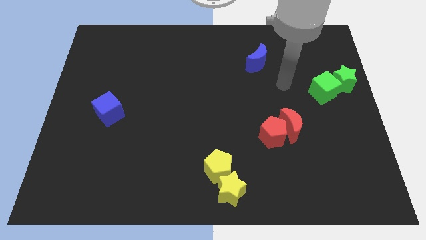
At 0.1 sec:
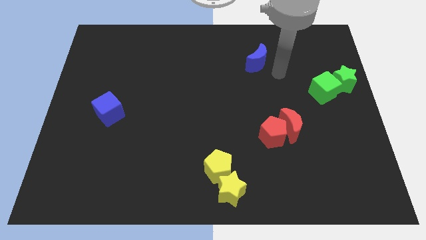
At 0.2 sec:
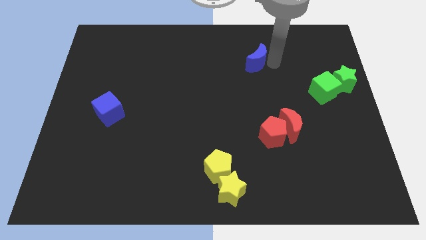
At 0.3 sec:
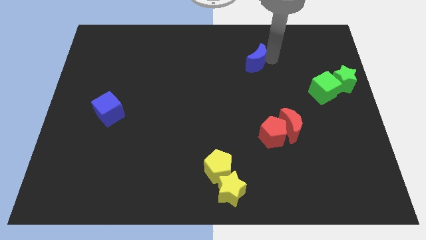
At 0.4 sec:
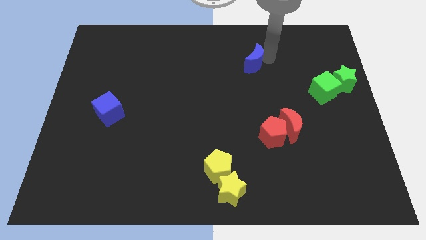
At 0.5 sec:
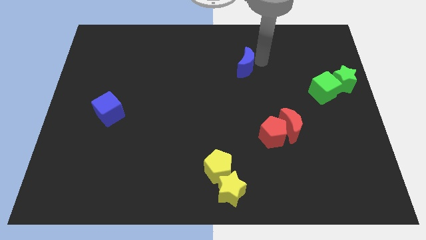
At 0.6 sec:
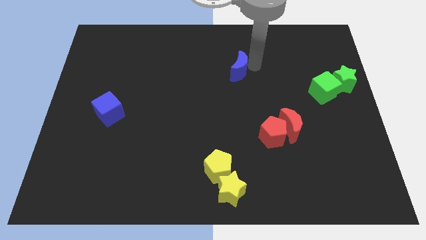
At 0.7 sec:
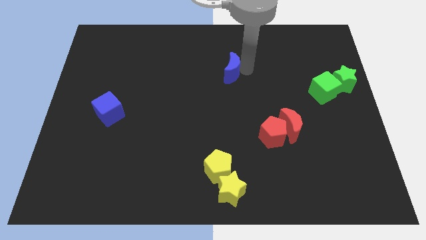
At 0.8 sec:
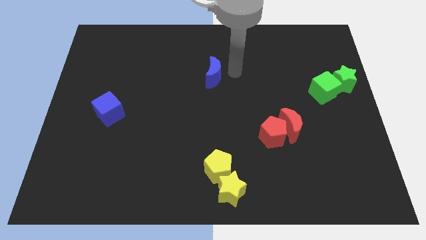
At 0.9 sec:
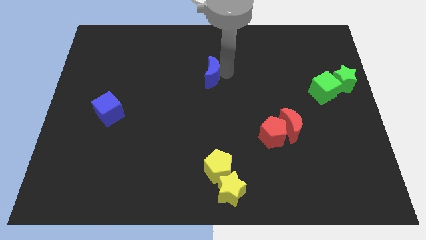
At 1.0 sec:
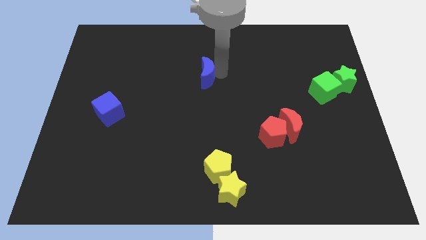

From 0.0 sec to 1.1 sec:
move the blue moon diagonal to the red pentagon

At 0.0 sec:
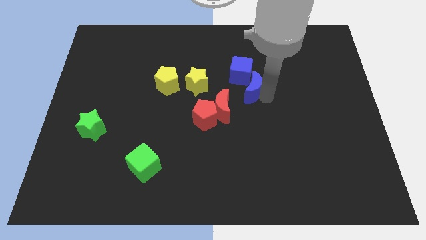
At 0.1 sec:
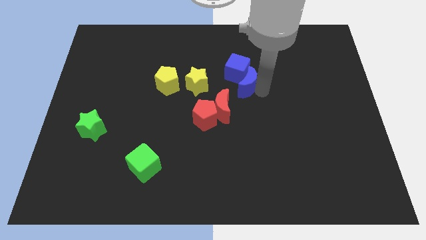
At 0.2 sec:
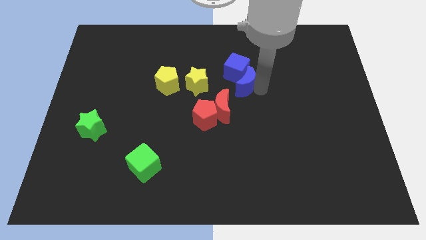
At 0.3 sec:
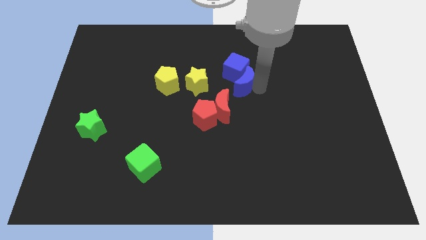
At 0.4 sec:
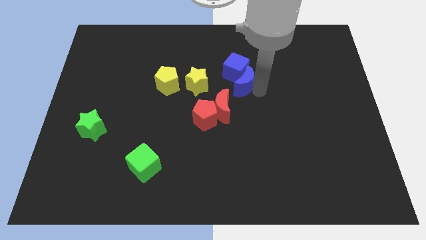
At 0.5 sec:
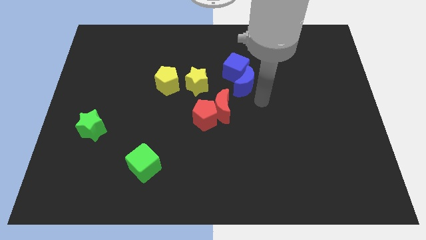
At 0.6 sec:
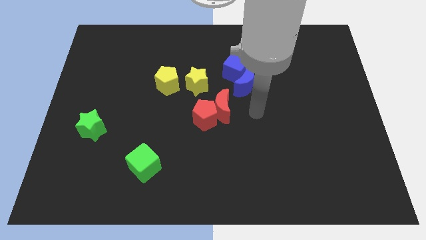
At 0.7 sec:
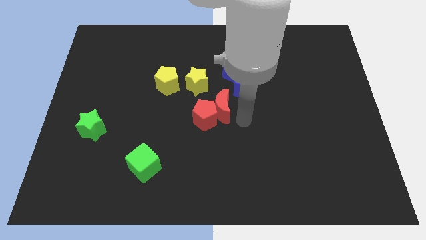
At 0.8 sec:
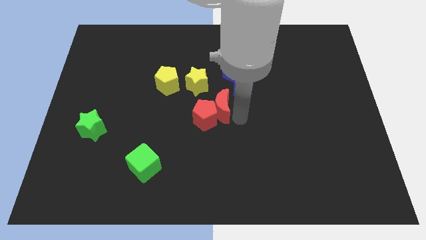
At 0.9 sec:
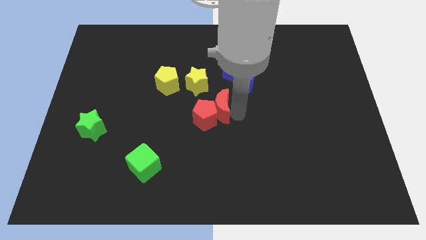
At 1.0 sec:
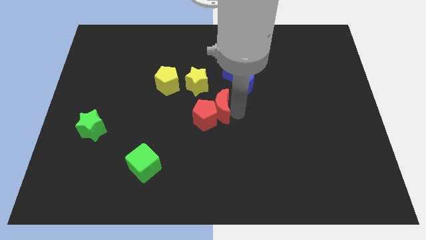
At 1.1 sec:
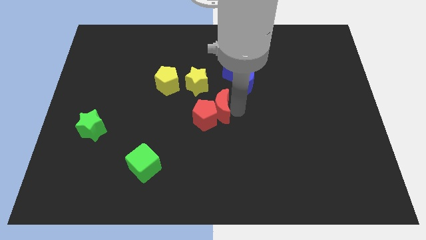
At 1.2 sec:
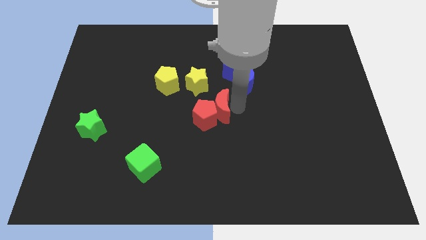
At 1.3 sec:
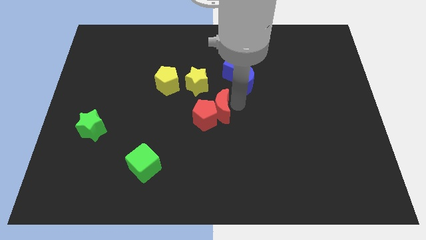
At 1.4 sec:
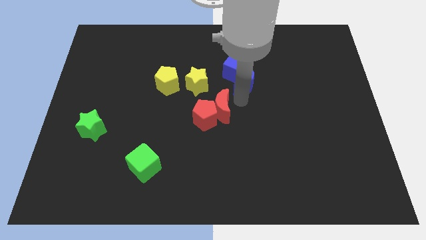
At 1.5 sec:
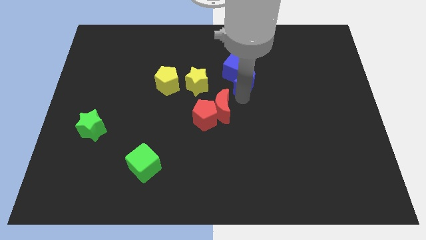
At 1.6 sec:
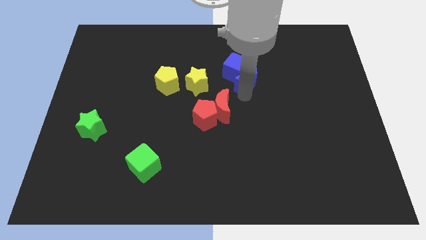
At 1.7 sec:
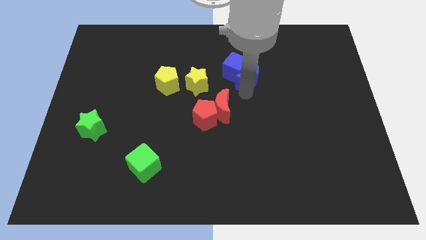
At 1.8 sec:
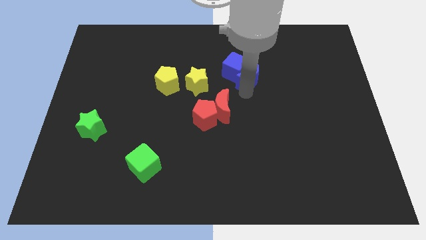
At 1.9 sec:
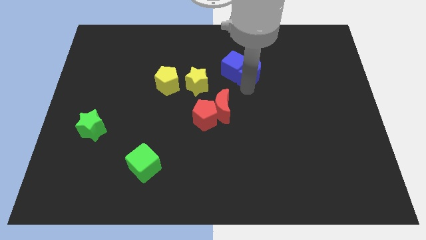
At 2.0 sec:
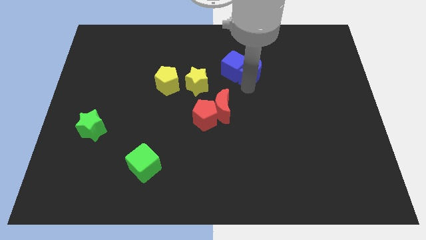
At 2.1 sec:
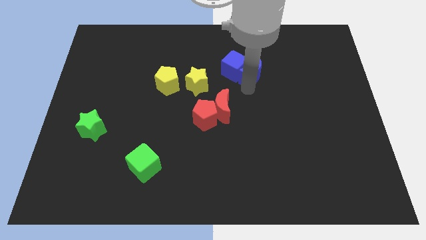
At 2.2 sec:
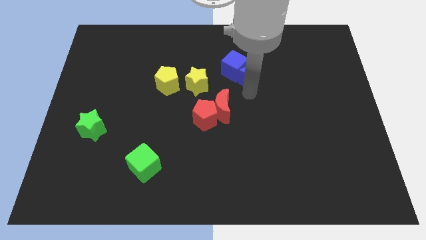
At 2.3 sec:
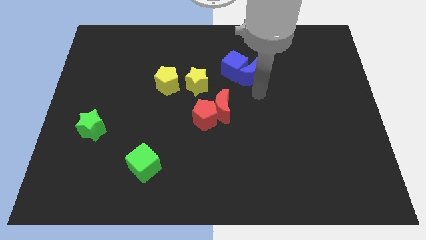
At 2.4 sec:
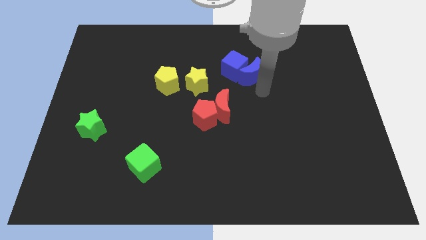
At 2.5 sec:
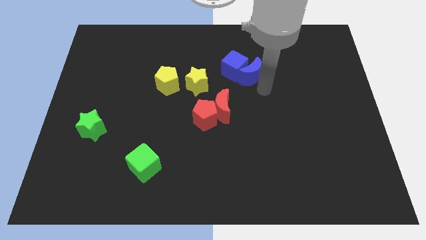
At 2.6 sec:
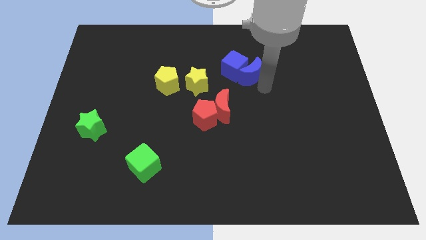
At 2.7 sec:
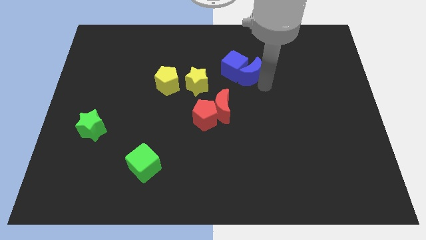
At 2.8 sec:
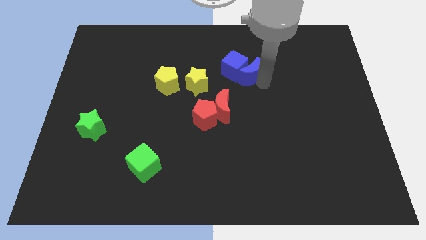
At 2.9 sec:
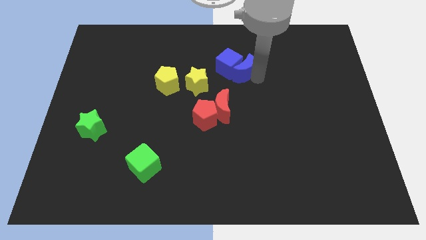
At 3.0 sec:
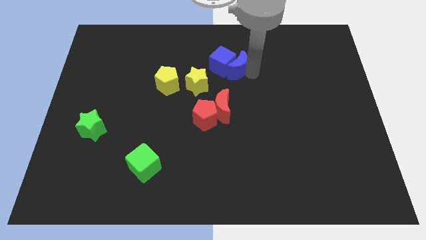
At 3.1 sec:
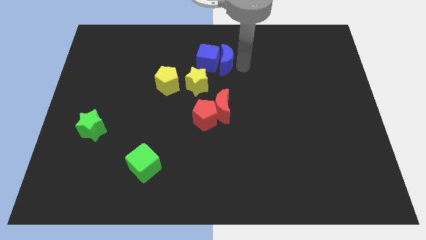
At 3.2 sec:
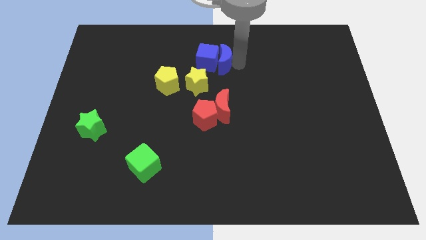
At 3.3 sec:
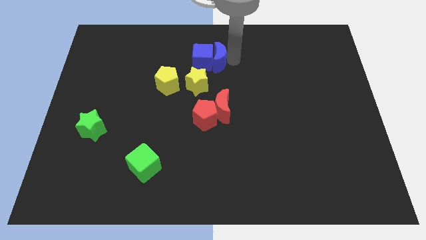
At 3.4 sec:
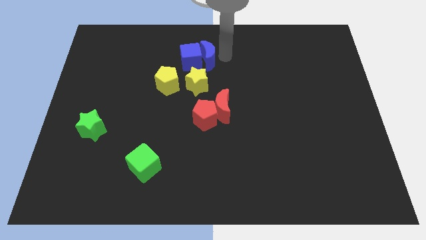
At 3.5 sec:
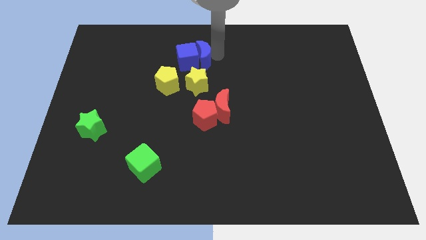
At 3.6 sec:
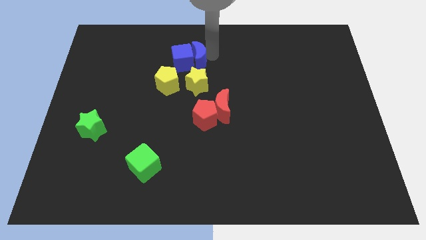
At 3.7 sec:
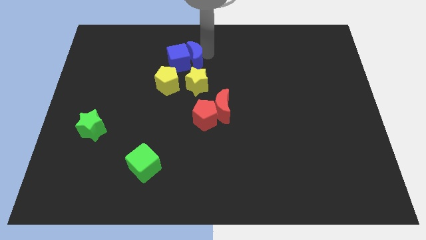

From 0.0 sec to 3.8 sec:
move the blue blocks above to the yellow blocks

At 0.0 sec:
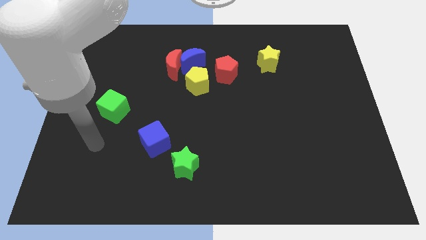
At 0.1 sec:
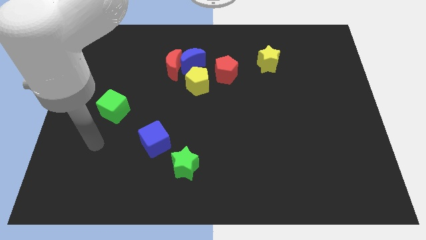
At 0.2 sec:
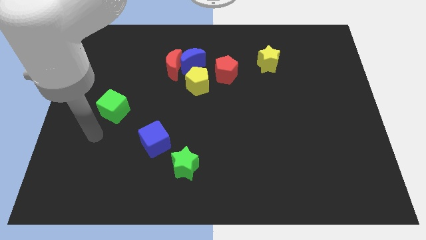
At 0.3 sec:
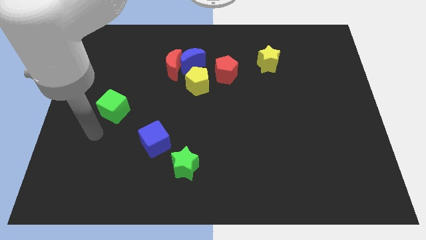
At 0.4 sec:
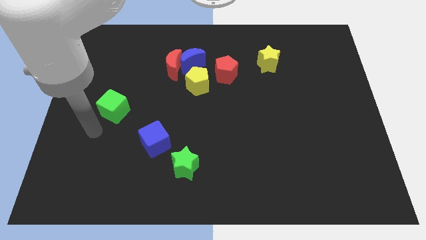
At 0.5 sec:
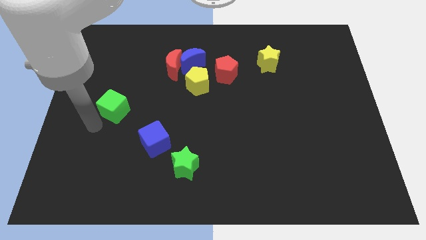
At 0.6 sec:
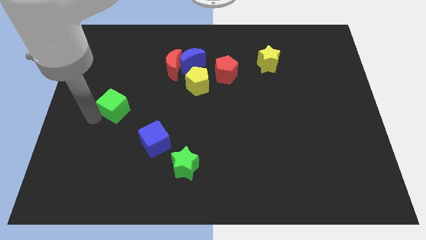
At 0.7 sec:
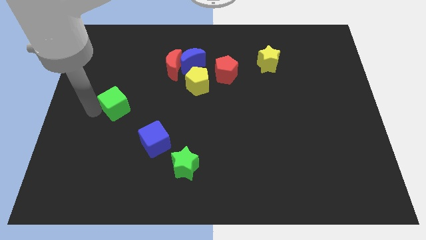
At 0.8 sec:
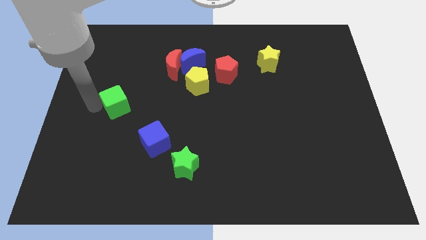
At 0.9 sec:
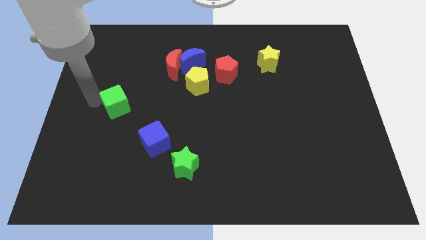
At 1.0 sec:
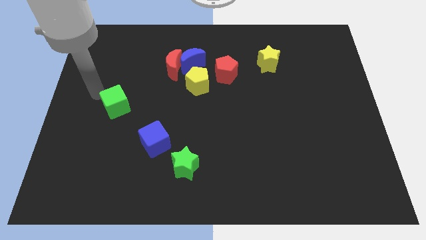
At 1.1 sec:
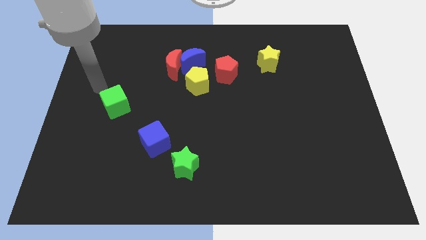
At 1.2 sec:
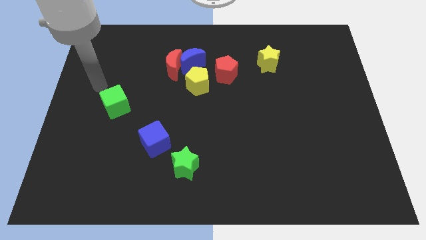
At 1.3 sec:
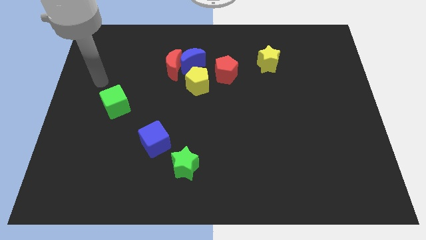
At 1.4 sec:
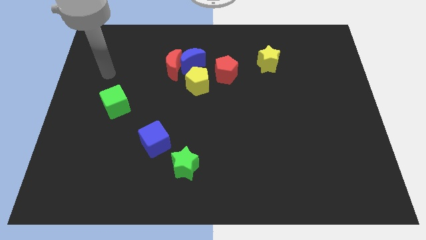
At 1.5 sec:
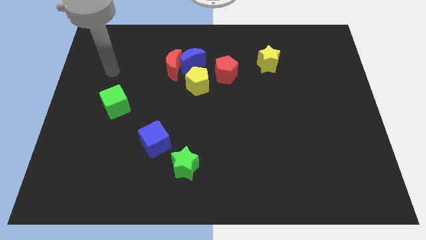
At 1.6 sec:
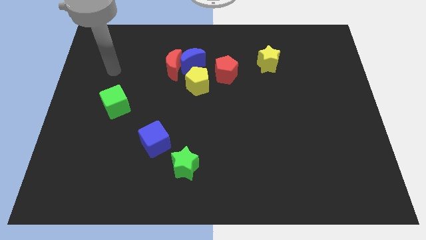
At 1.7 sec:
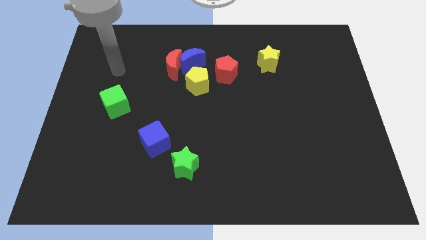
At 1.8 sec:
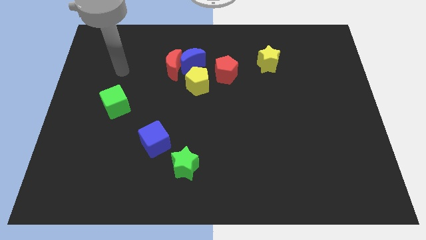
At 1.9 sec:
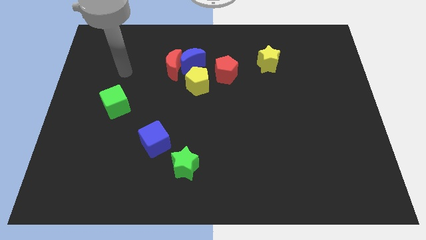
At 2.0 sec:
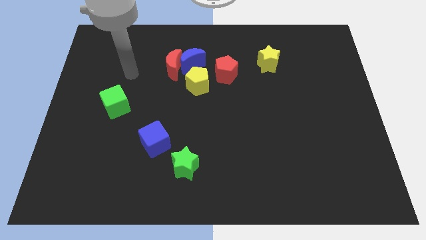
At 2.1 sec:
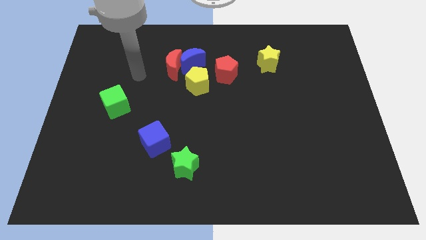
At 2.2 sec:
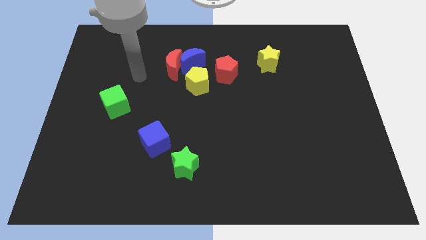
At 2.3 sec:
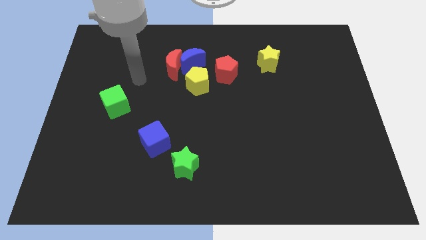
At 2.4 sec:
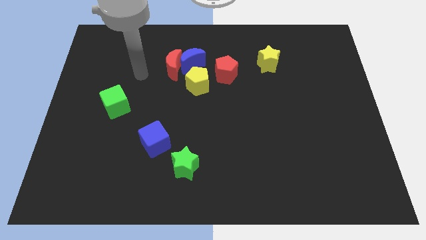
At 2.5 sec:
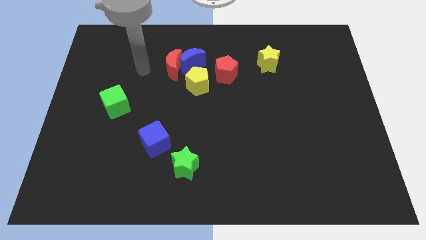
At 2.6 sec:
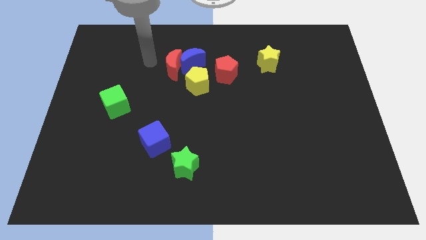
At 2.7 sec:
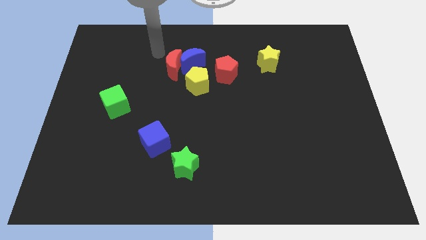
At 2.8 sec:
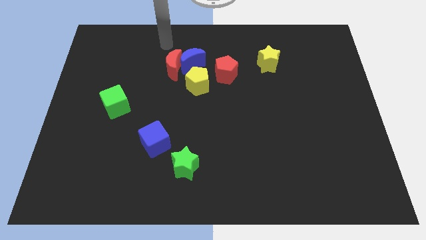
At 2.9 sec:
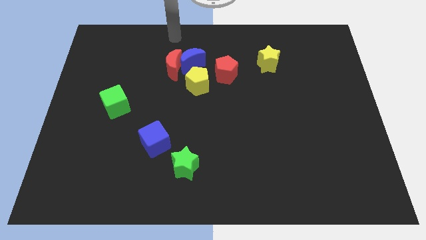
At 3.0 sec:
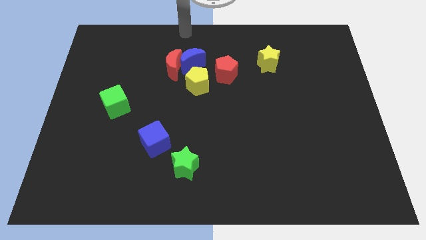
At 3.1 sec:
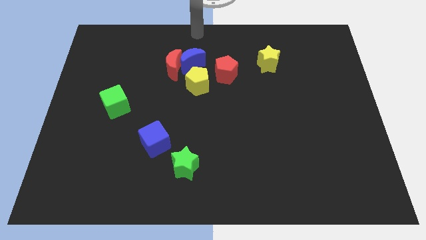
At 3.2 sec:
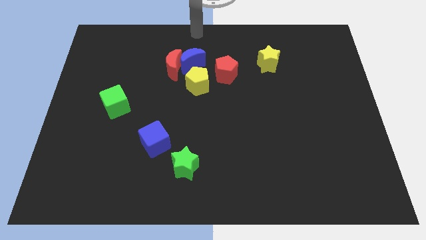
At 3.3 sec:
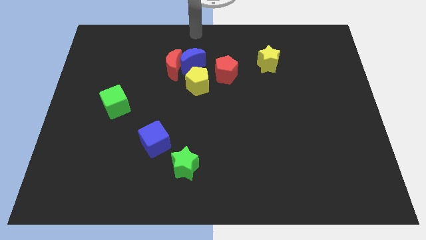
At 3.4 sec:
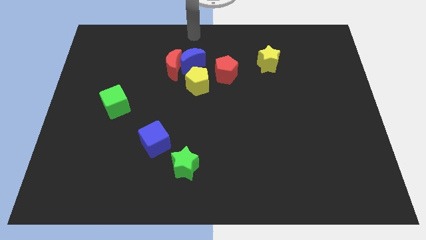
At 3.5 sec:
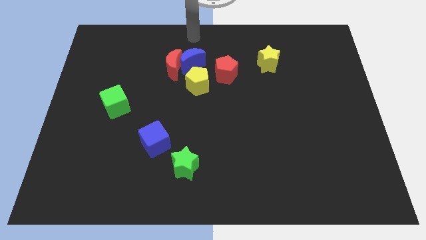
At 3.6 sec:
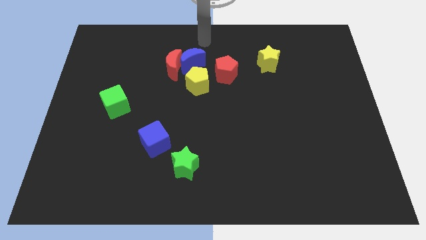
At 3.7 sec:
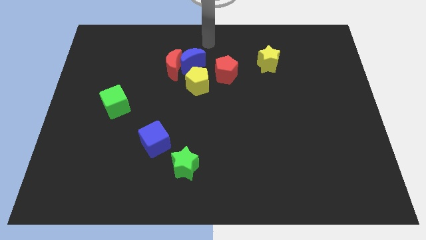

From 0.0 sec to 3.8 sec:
move the green cube slightly

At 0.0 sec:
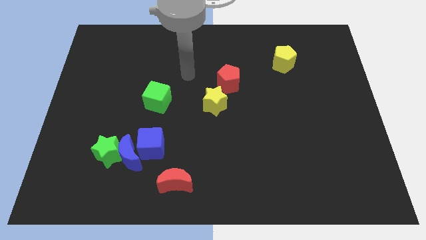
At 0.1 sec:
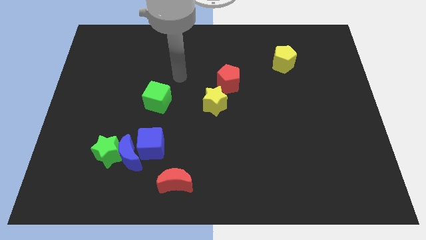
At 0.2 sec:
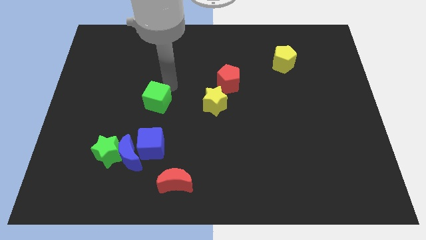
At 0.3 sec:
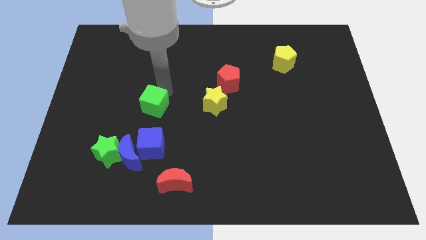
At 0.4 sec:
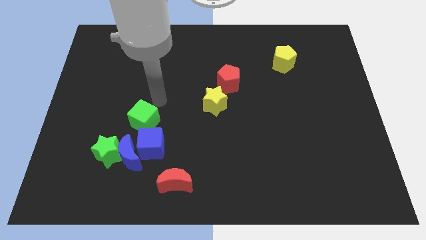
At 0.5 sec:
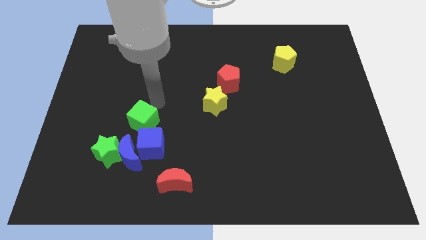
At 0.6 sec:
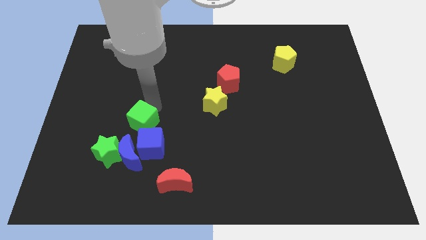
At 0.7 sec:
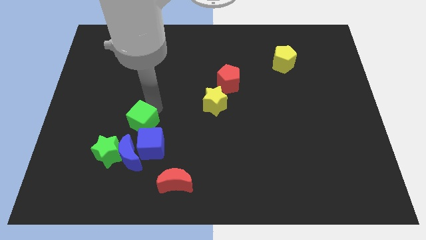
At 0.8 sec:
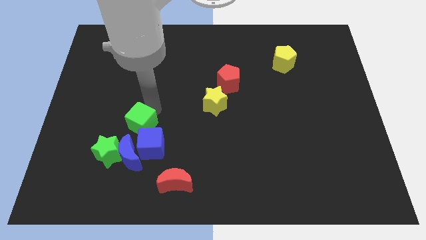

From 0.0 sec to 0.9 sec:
push the green cube close to the blue cube
